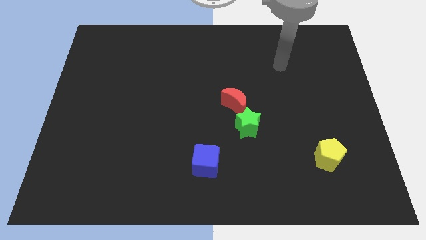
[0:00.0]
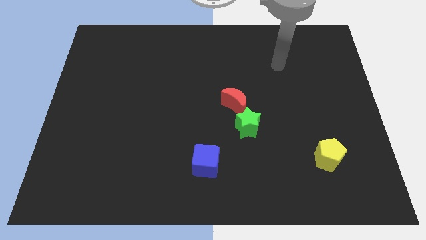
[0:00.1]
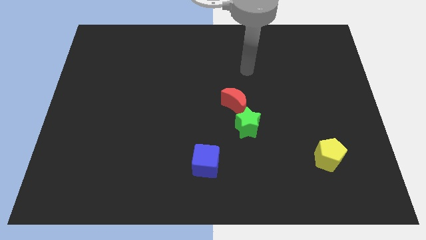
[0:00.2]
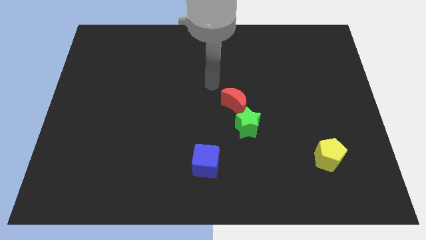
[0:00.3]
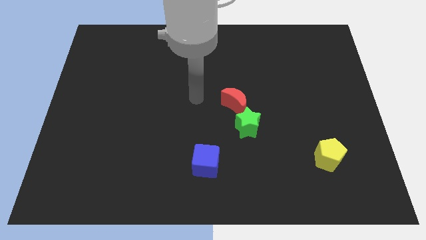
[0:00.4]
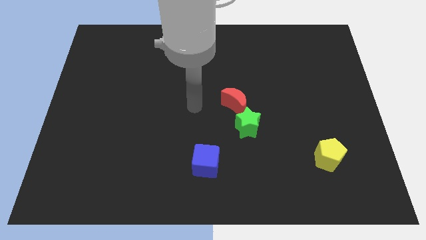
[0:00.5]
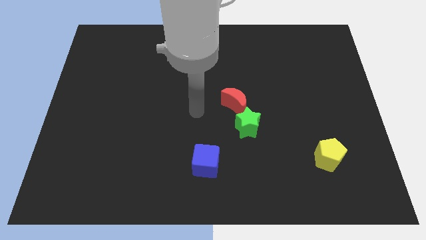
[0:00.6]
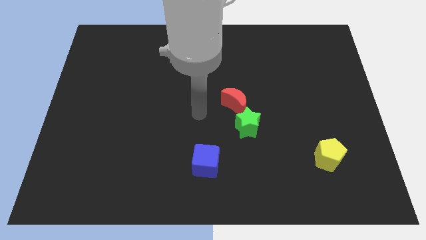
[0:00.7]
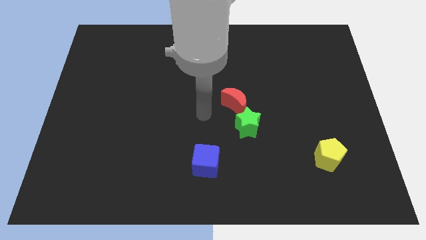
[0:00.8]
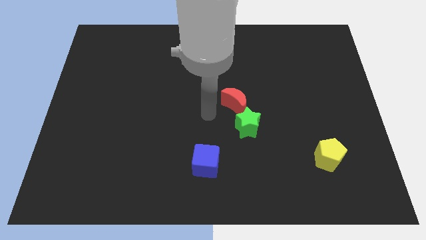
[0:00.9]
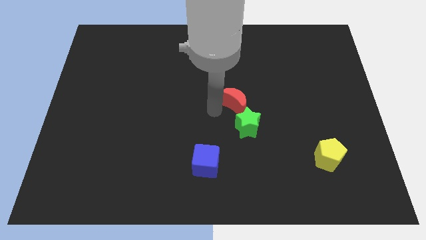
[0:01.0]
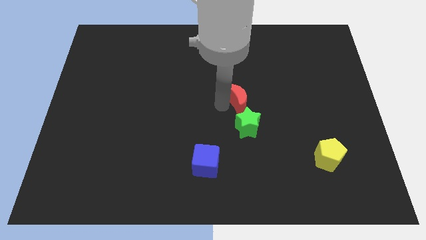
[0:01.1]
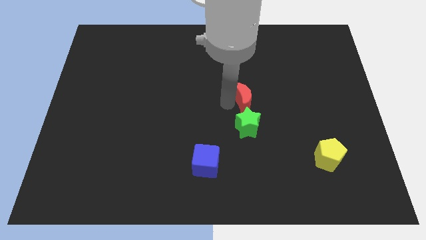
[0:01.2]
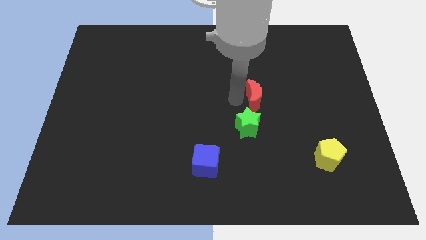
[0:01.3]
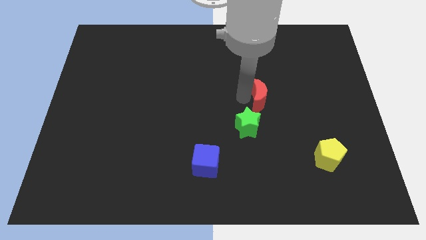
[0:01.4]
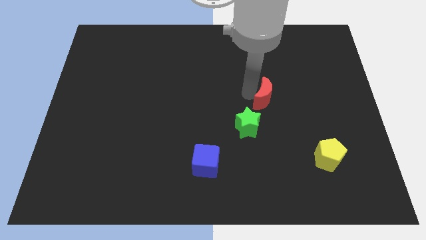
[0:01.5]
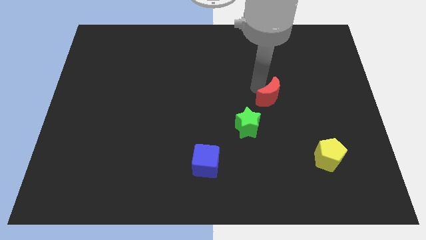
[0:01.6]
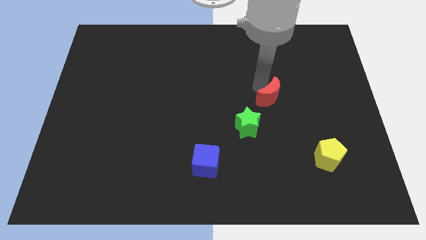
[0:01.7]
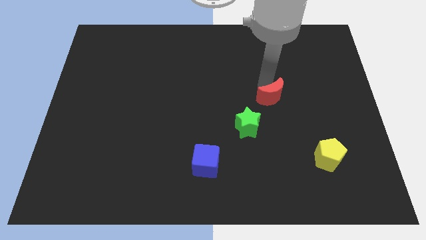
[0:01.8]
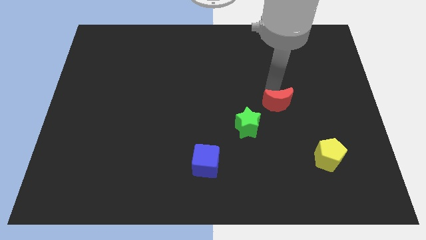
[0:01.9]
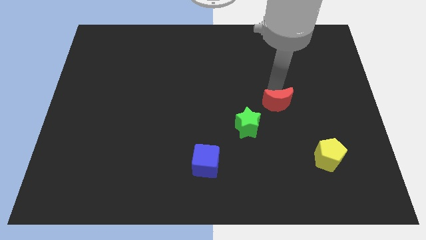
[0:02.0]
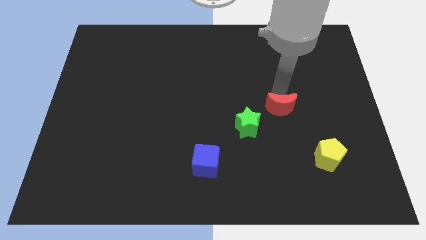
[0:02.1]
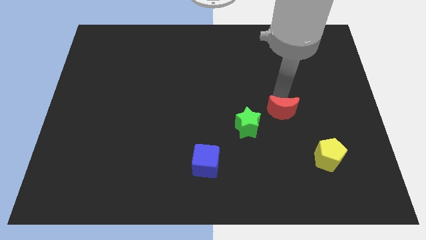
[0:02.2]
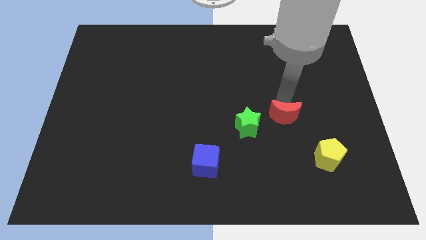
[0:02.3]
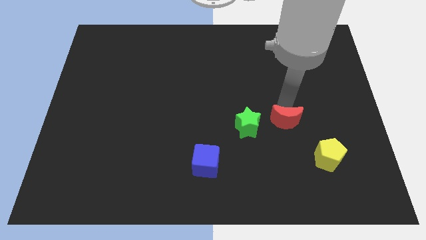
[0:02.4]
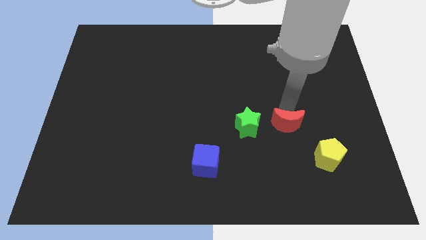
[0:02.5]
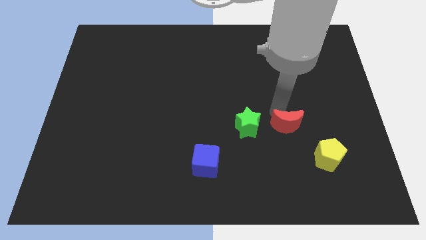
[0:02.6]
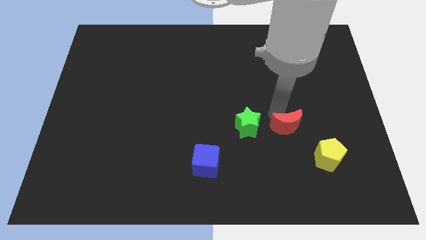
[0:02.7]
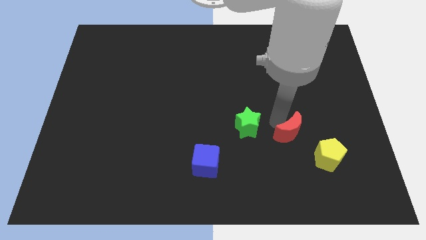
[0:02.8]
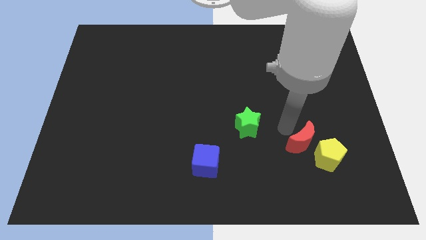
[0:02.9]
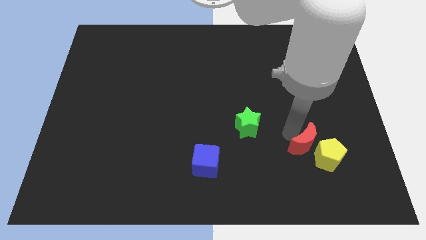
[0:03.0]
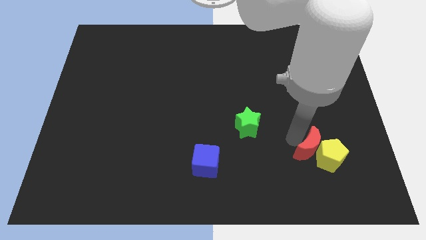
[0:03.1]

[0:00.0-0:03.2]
move the moon towards the pentagon

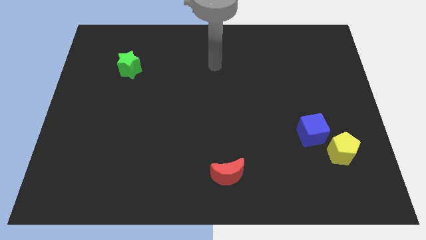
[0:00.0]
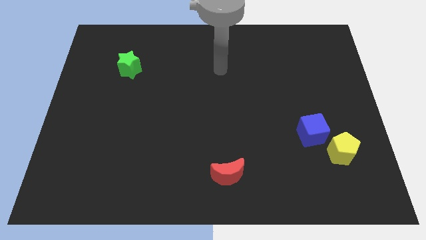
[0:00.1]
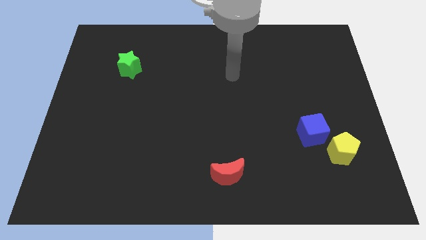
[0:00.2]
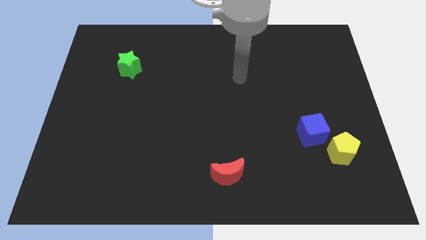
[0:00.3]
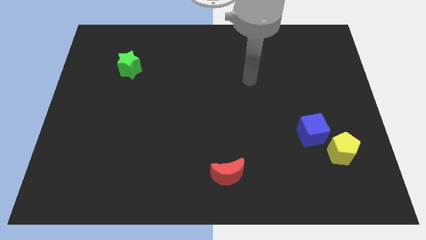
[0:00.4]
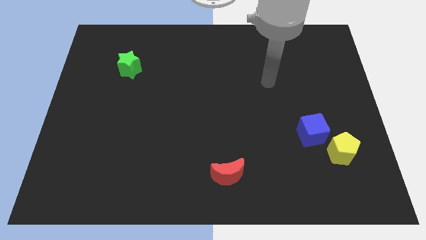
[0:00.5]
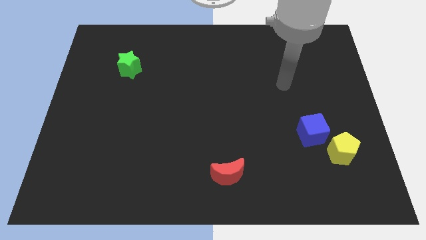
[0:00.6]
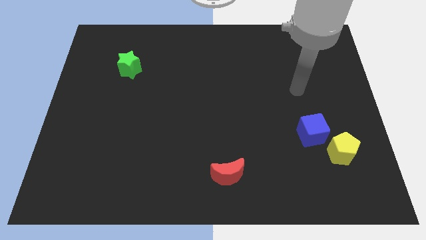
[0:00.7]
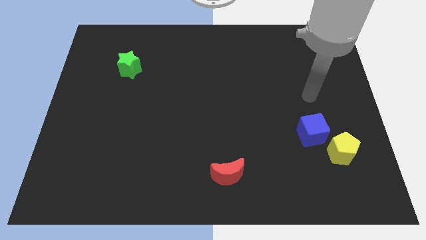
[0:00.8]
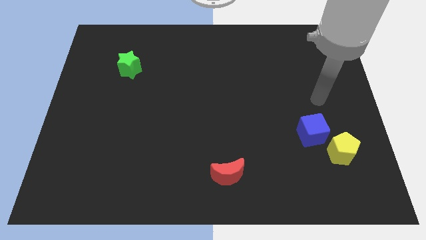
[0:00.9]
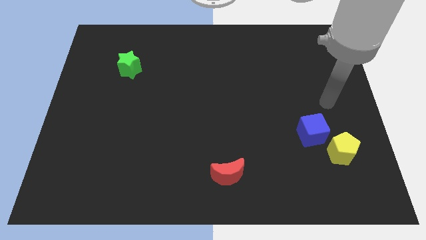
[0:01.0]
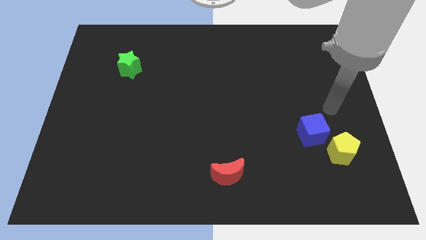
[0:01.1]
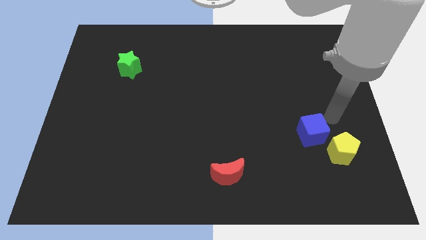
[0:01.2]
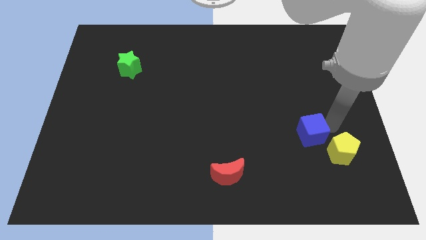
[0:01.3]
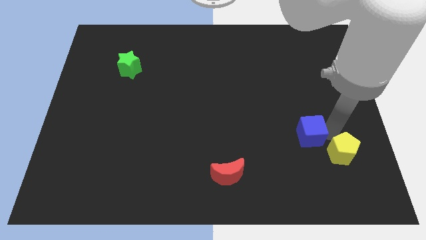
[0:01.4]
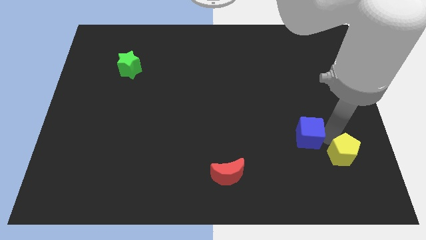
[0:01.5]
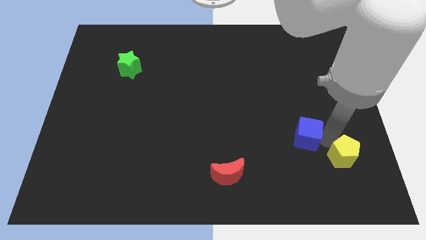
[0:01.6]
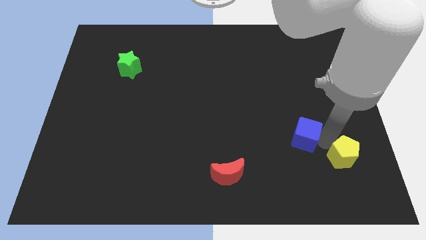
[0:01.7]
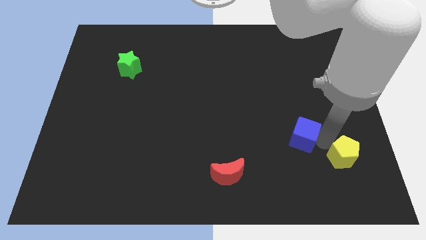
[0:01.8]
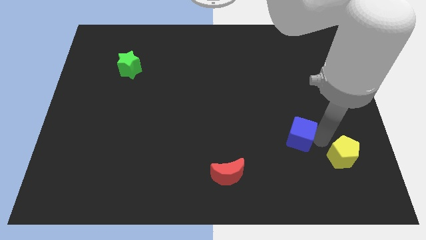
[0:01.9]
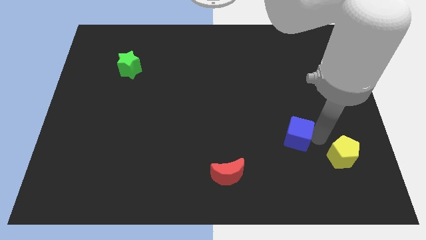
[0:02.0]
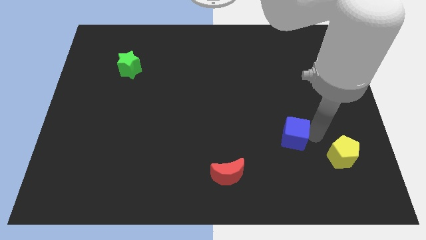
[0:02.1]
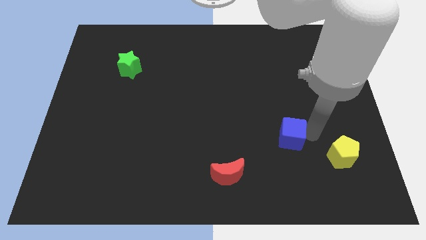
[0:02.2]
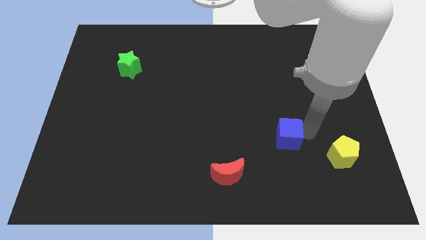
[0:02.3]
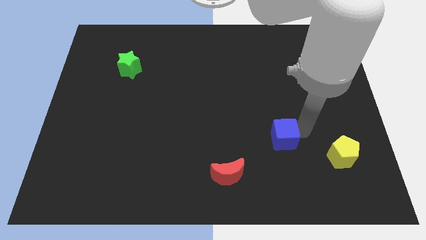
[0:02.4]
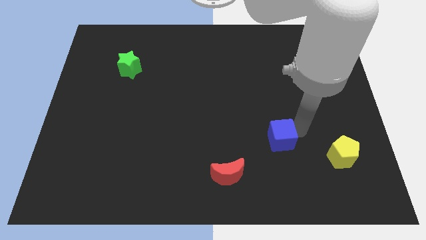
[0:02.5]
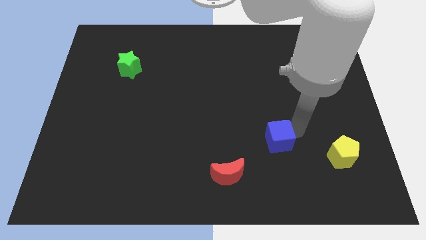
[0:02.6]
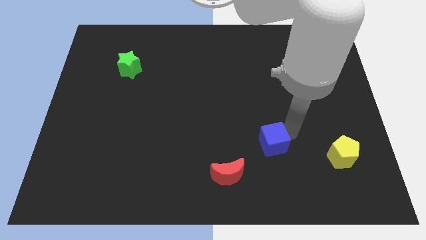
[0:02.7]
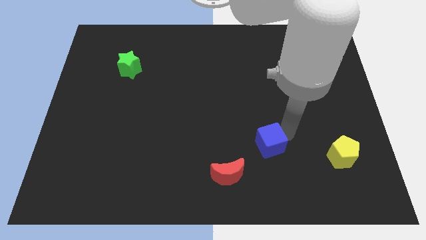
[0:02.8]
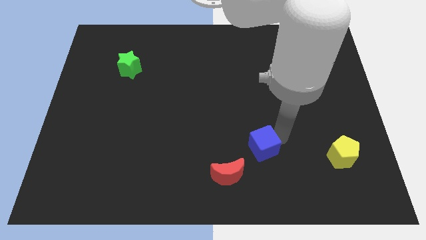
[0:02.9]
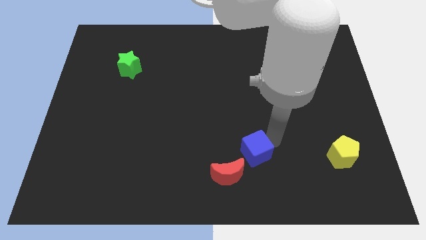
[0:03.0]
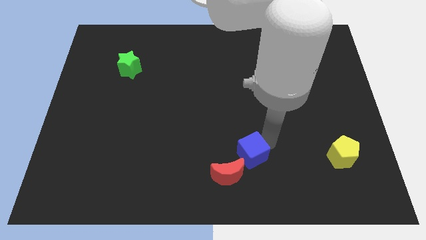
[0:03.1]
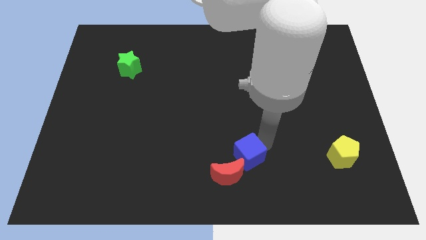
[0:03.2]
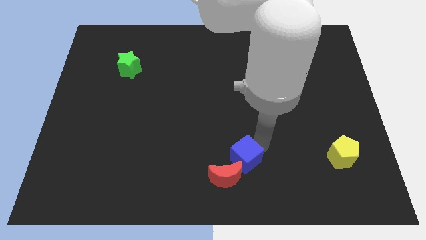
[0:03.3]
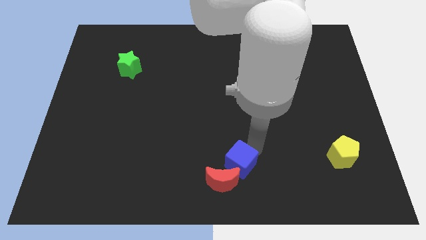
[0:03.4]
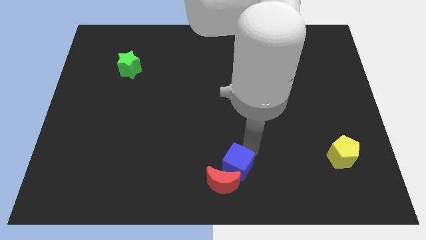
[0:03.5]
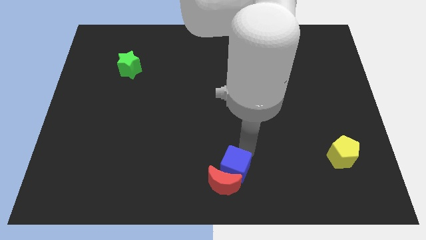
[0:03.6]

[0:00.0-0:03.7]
push the blue block close to the moon

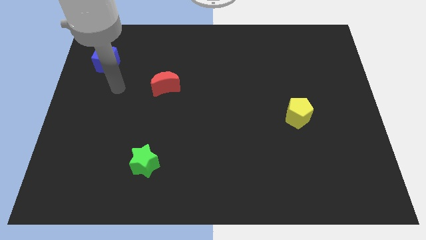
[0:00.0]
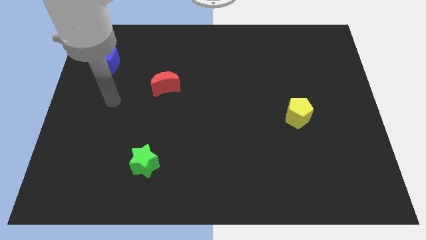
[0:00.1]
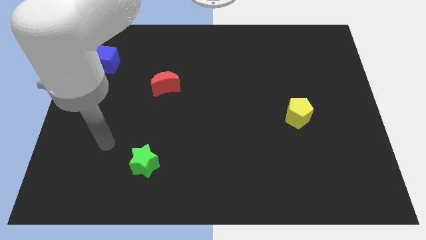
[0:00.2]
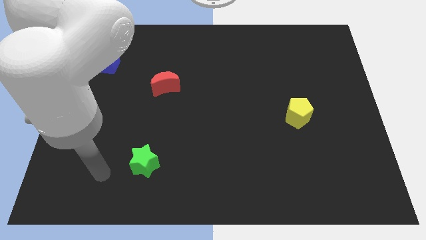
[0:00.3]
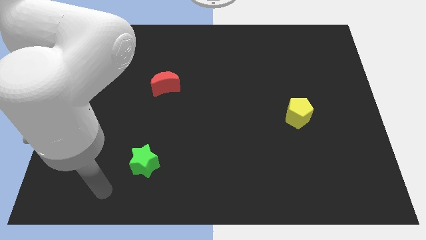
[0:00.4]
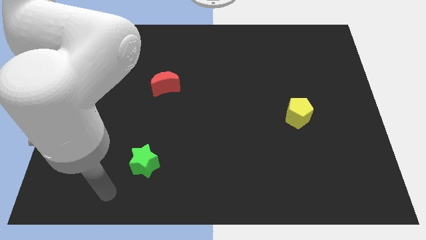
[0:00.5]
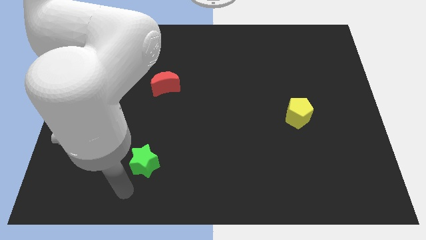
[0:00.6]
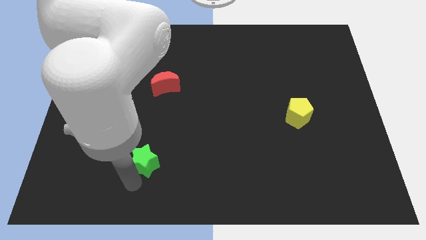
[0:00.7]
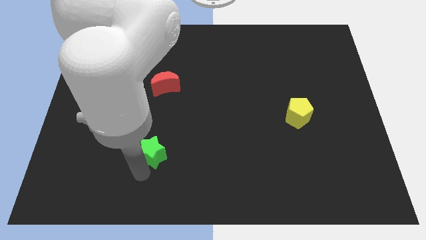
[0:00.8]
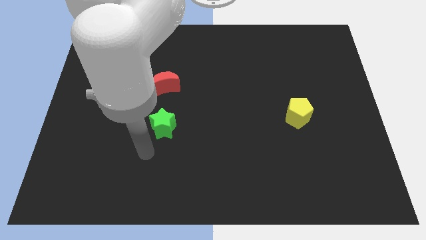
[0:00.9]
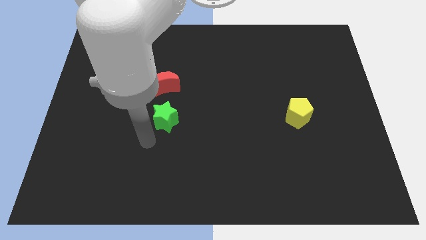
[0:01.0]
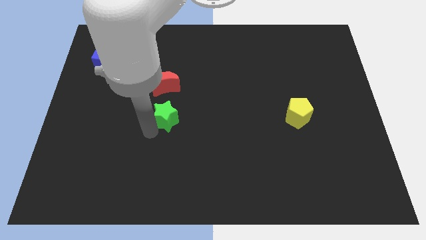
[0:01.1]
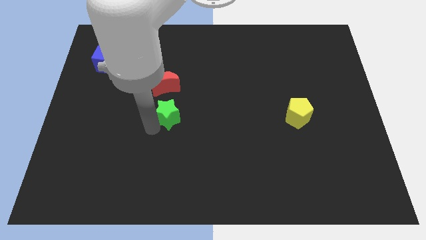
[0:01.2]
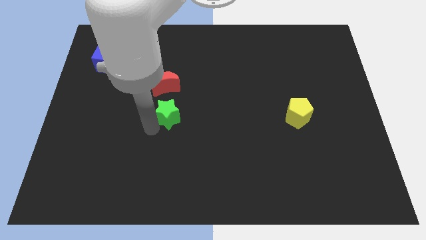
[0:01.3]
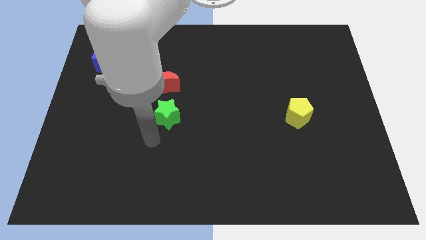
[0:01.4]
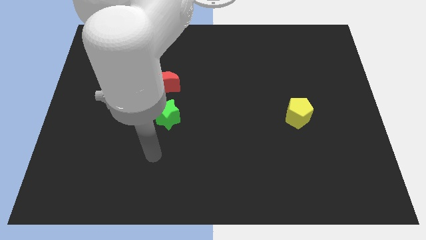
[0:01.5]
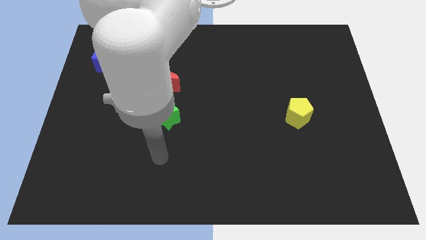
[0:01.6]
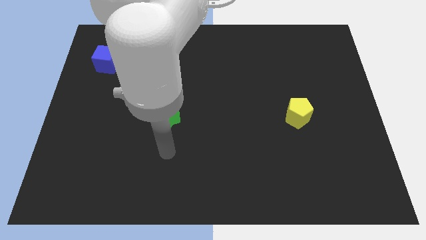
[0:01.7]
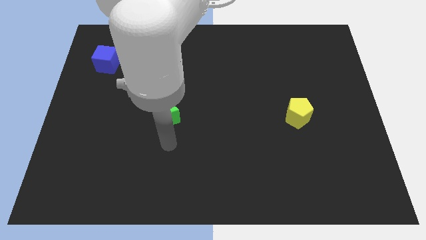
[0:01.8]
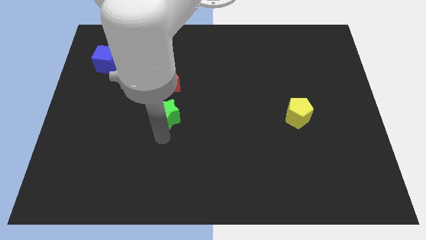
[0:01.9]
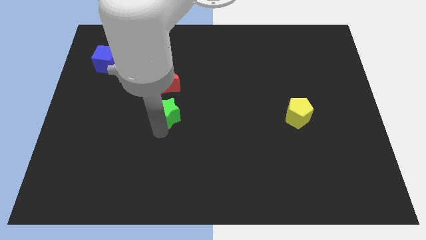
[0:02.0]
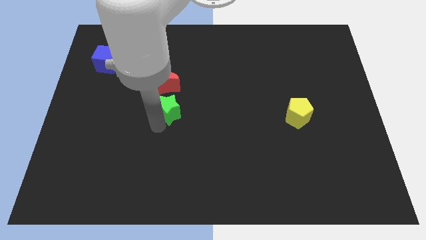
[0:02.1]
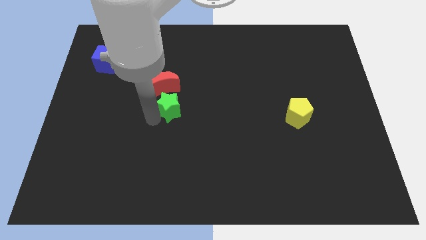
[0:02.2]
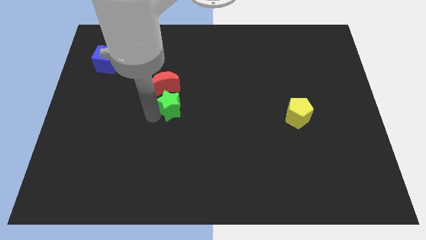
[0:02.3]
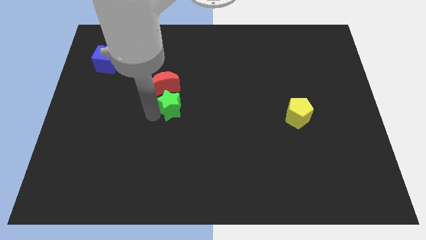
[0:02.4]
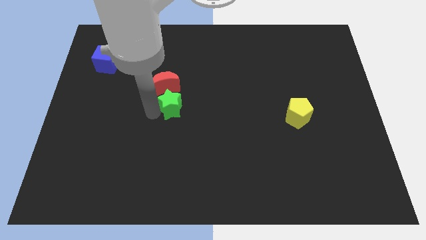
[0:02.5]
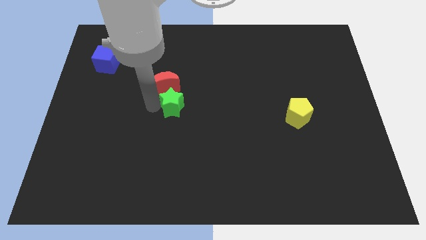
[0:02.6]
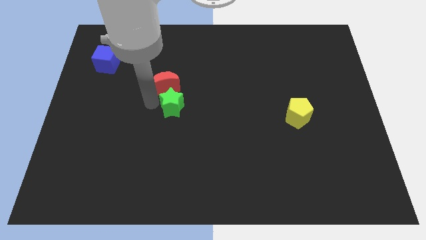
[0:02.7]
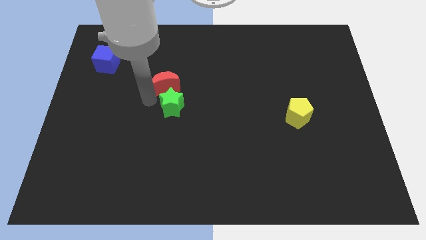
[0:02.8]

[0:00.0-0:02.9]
put the green block close to the red block
